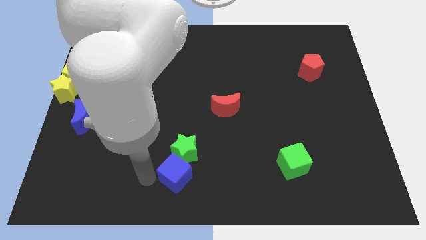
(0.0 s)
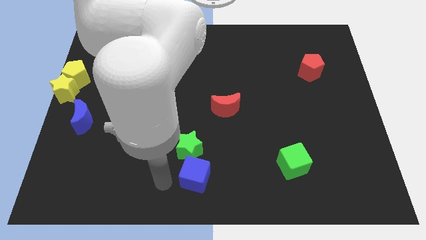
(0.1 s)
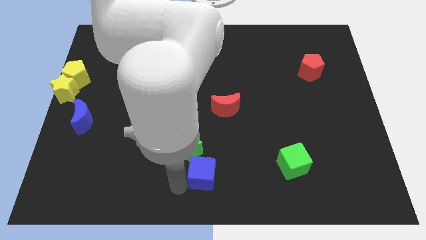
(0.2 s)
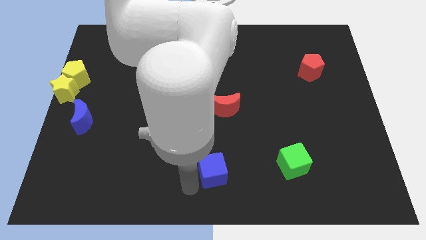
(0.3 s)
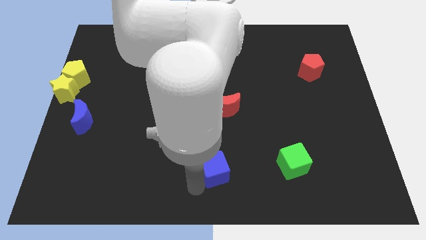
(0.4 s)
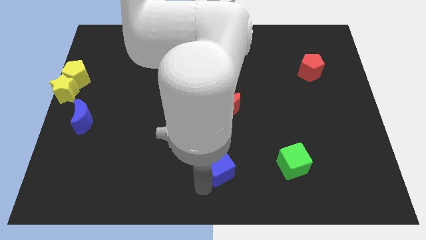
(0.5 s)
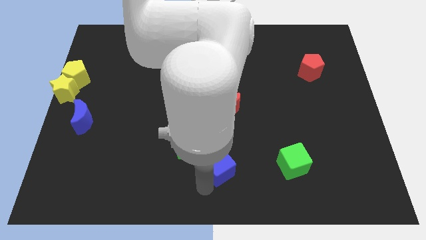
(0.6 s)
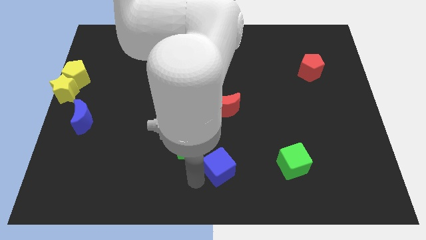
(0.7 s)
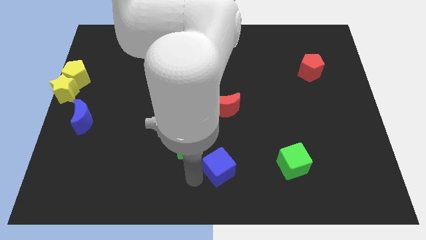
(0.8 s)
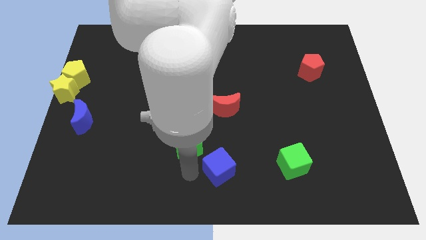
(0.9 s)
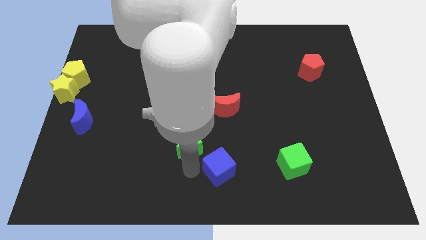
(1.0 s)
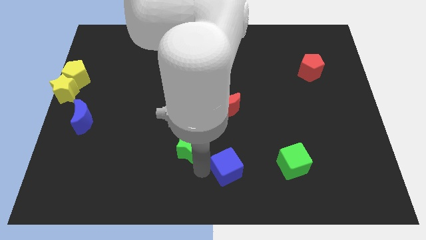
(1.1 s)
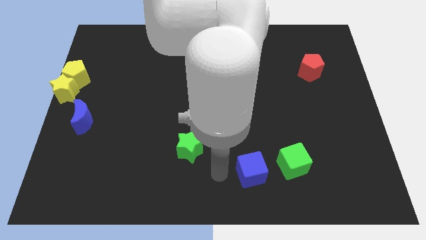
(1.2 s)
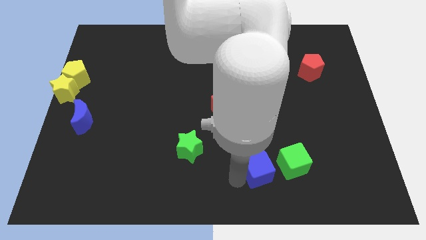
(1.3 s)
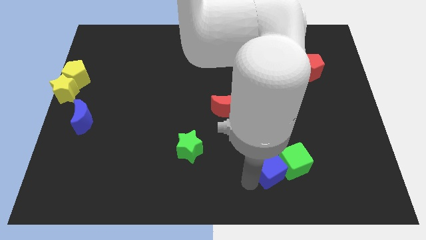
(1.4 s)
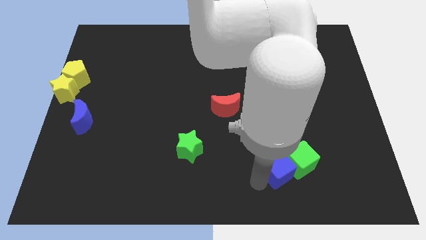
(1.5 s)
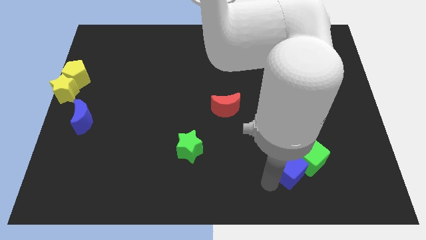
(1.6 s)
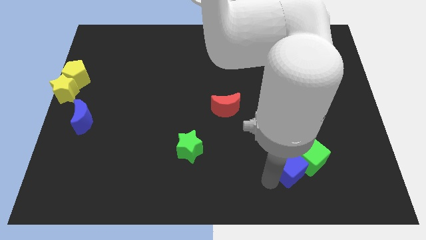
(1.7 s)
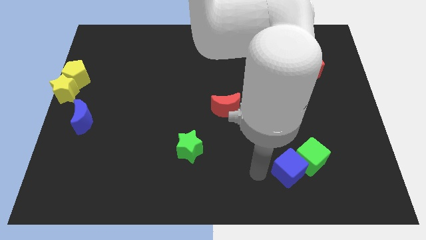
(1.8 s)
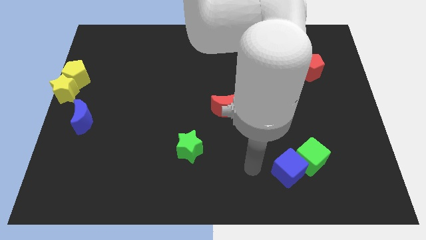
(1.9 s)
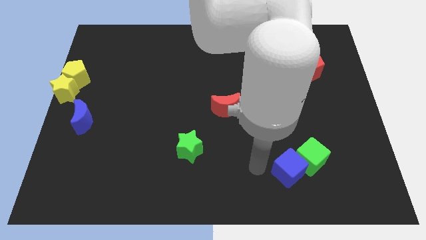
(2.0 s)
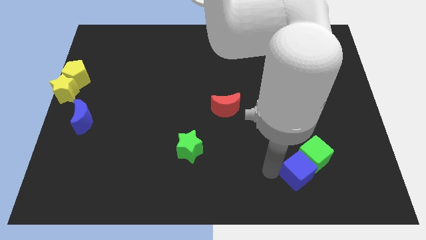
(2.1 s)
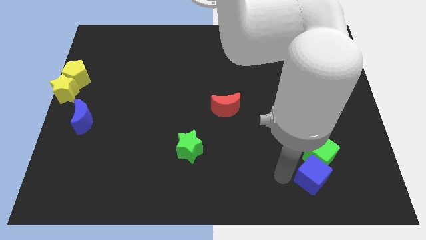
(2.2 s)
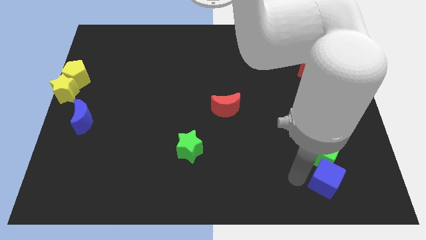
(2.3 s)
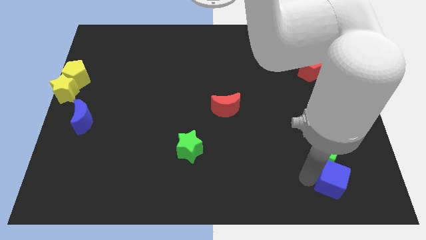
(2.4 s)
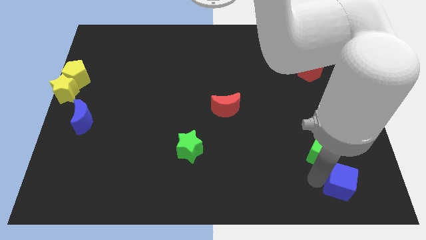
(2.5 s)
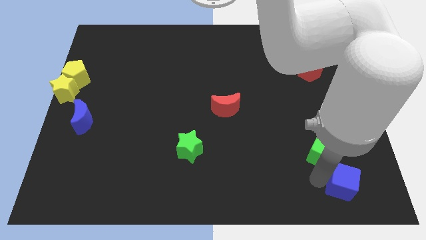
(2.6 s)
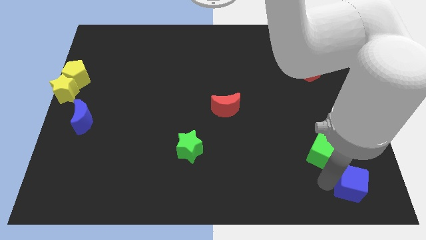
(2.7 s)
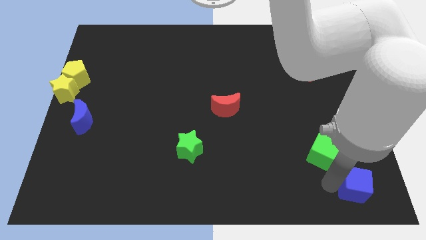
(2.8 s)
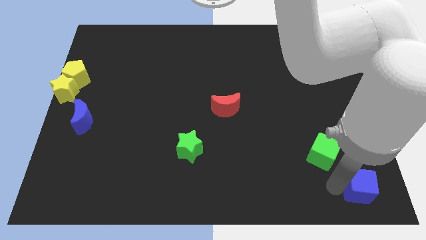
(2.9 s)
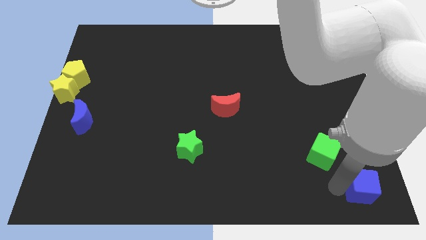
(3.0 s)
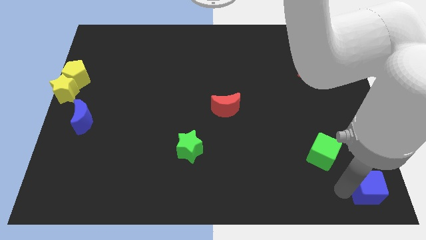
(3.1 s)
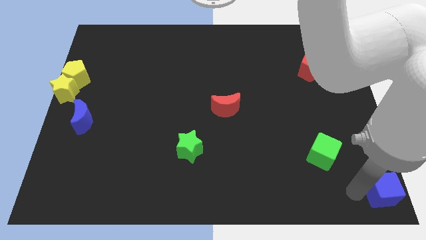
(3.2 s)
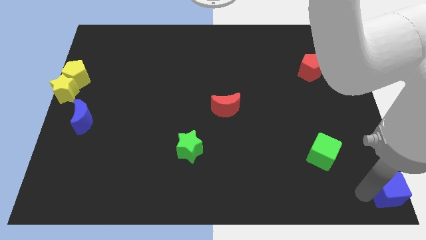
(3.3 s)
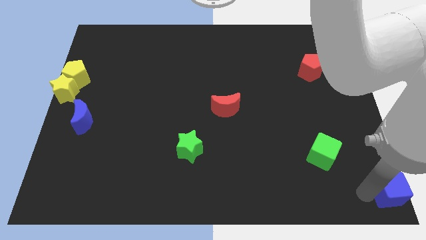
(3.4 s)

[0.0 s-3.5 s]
move the blue cube to the bottom right

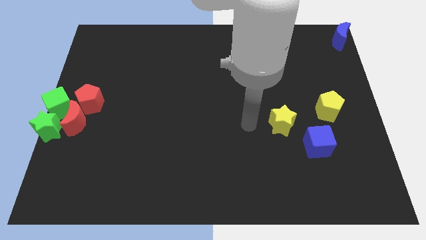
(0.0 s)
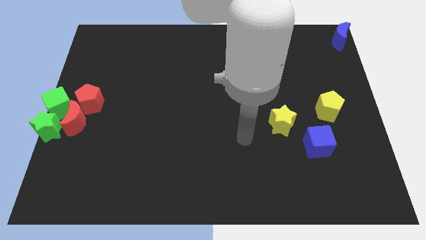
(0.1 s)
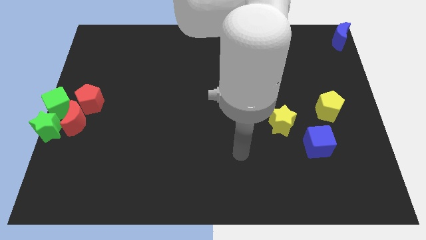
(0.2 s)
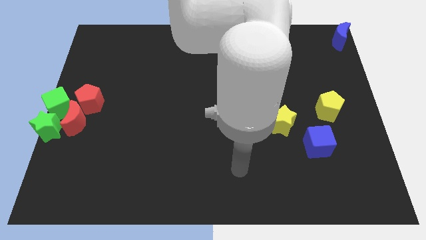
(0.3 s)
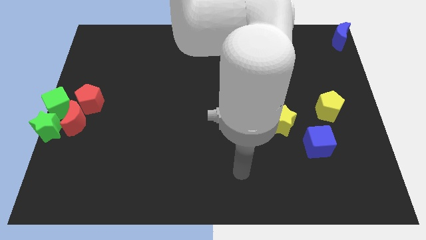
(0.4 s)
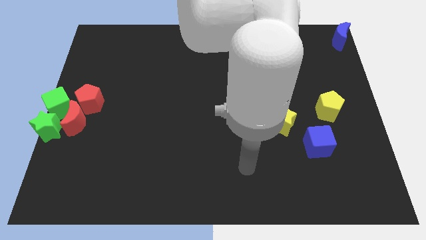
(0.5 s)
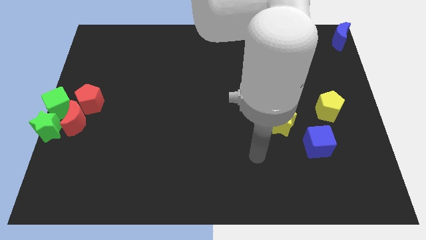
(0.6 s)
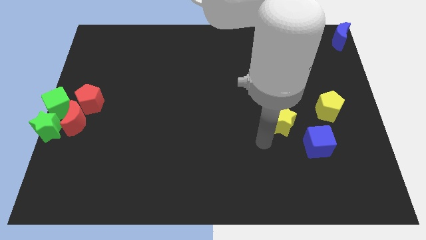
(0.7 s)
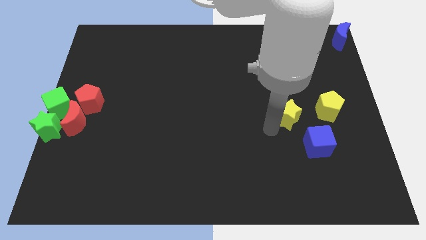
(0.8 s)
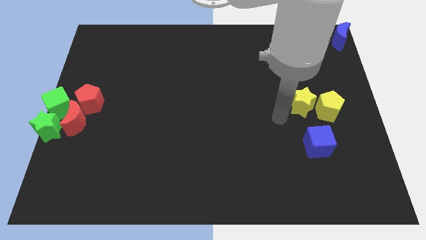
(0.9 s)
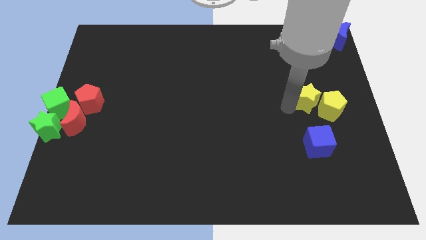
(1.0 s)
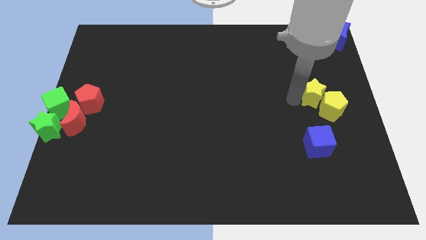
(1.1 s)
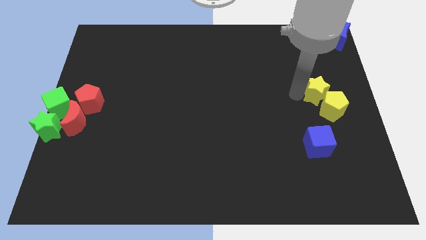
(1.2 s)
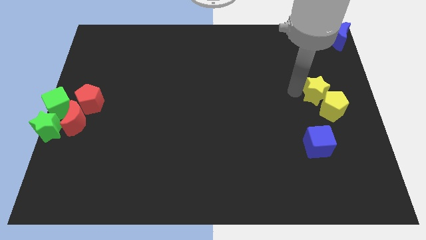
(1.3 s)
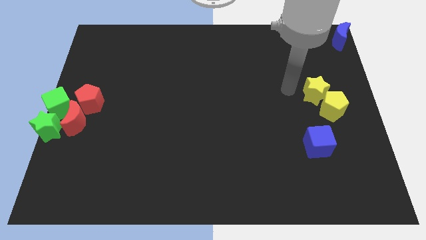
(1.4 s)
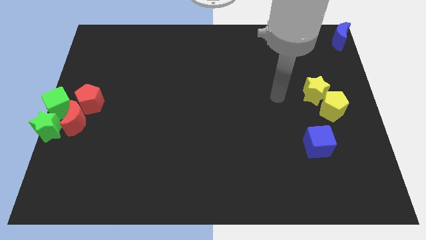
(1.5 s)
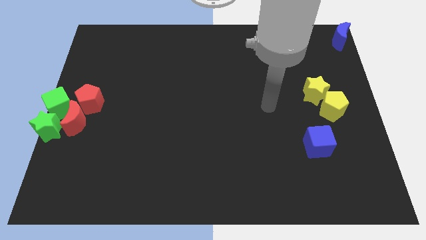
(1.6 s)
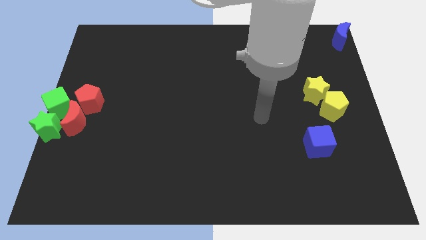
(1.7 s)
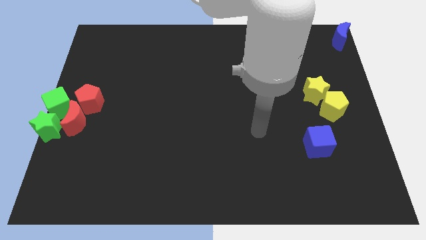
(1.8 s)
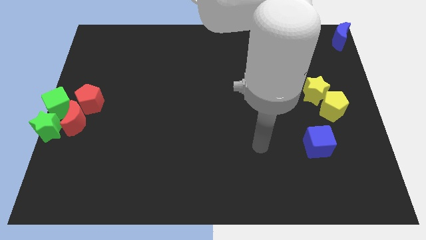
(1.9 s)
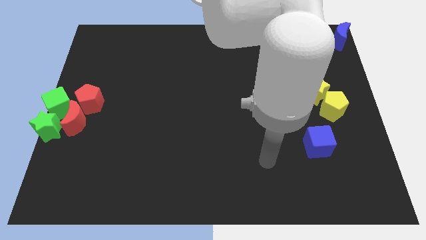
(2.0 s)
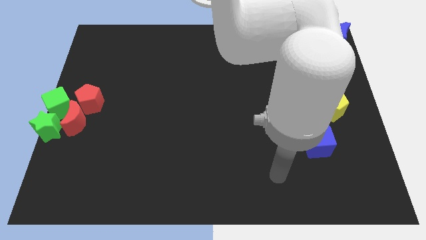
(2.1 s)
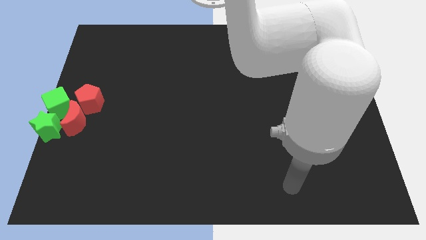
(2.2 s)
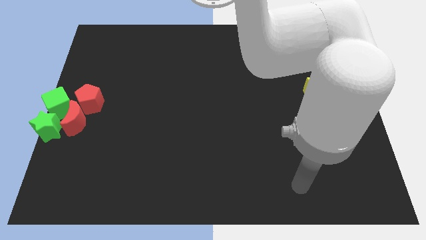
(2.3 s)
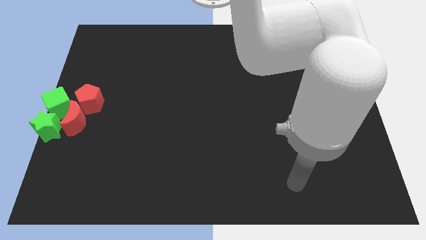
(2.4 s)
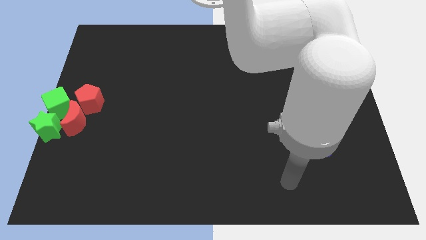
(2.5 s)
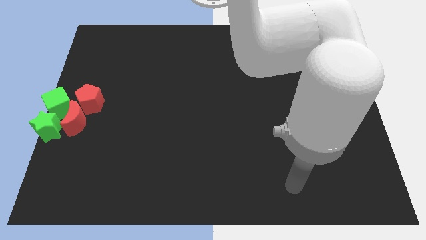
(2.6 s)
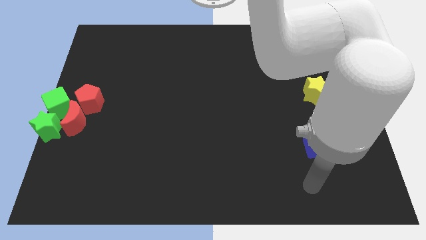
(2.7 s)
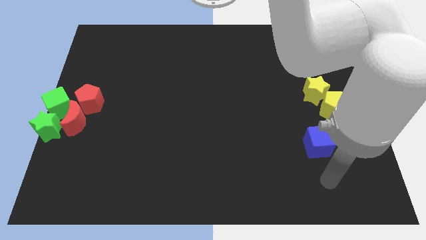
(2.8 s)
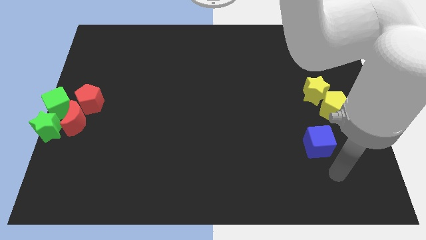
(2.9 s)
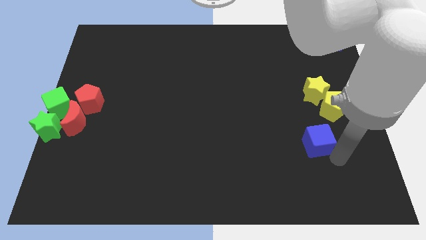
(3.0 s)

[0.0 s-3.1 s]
place the yellow star parallel to the blue cube

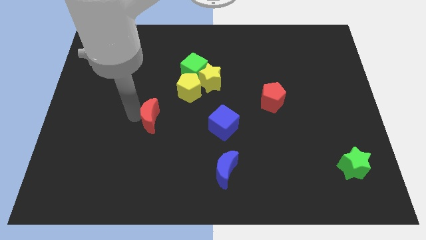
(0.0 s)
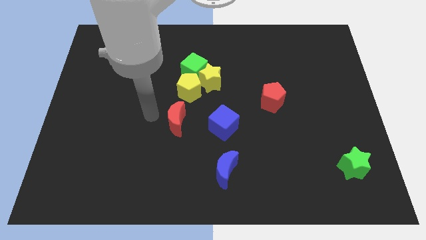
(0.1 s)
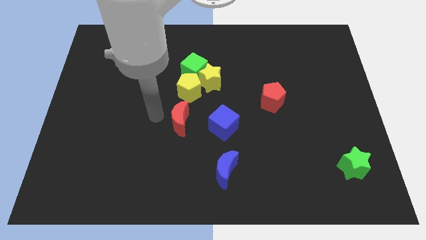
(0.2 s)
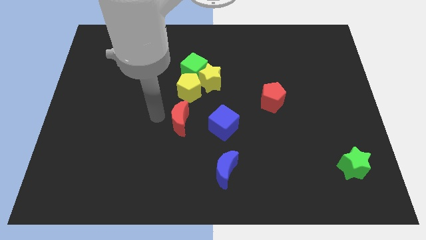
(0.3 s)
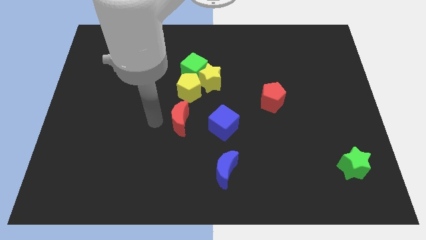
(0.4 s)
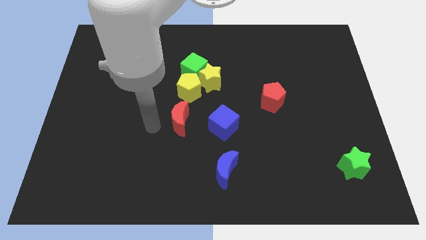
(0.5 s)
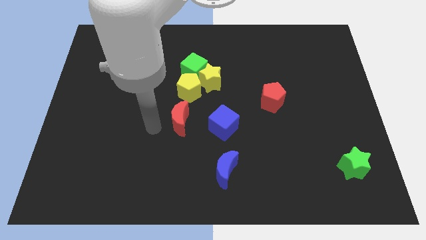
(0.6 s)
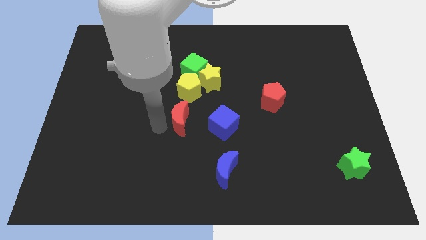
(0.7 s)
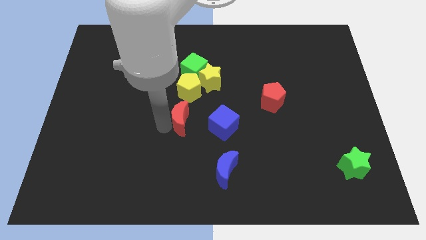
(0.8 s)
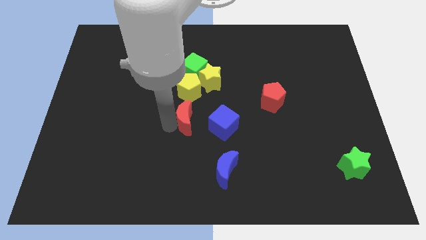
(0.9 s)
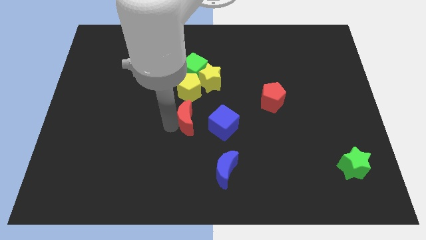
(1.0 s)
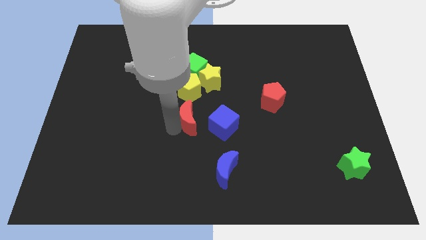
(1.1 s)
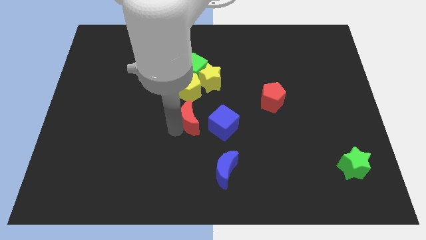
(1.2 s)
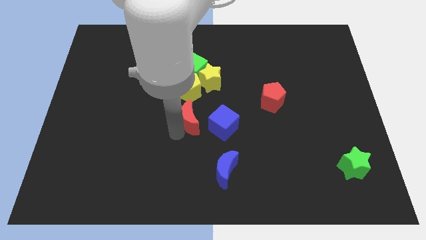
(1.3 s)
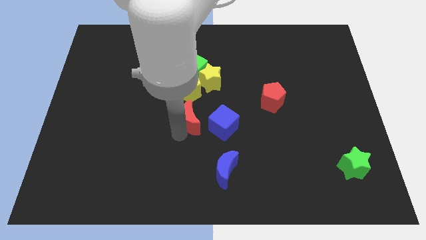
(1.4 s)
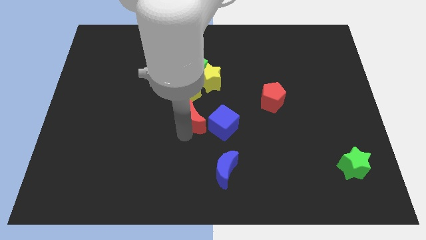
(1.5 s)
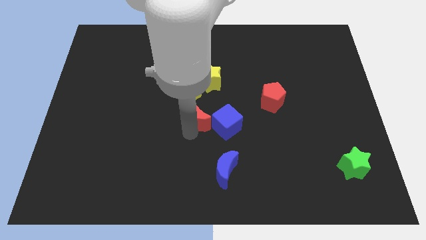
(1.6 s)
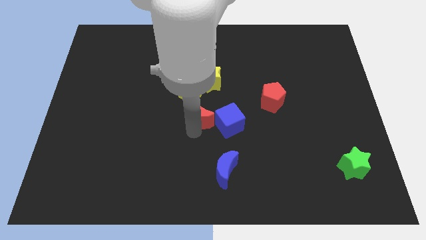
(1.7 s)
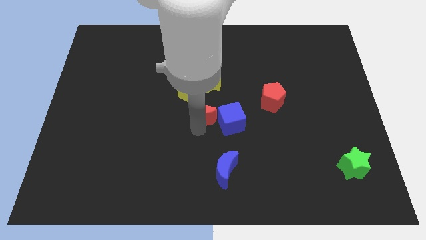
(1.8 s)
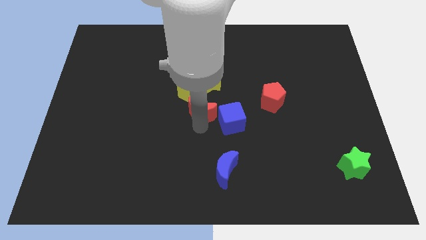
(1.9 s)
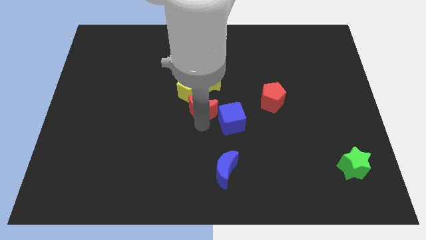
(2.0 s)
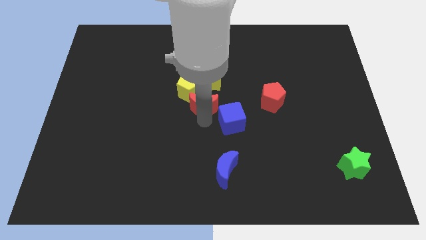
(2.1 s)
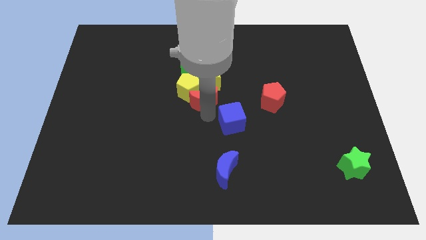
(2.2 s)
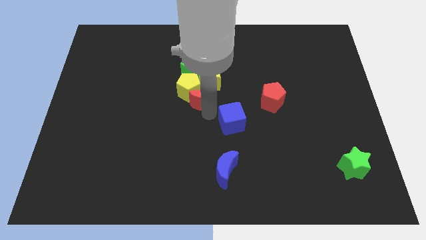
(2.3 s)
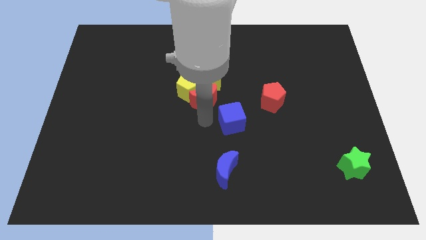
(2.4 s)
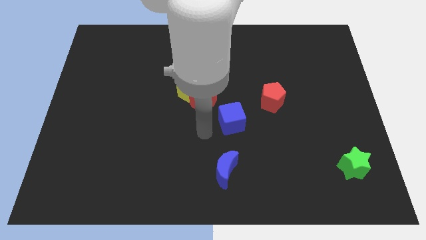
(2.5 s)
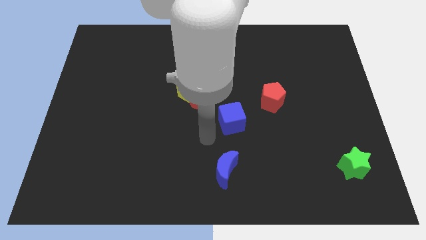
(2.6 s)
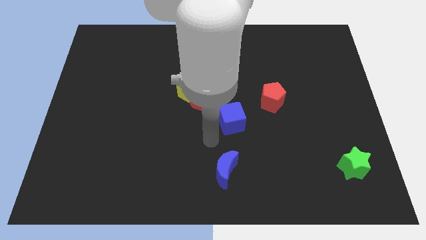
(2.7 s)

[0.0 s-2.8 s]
put the red crescent at the bottom side of the group of yellow blocks
